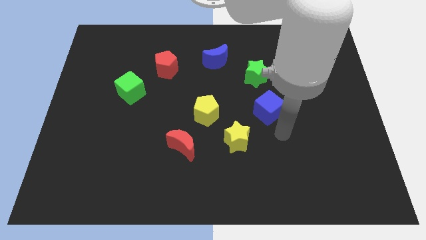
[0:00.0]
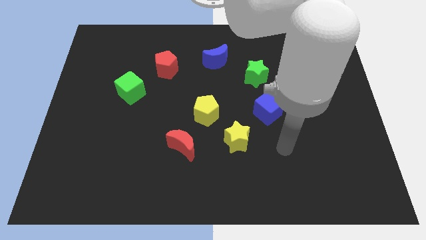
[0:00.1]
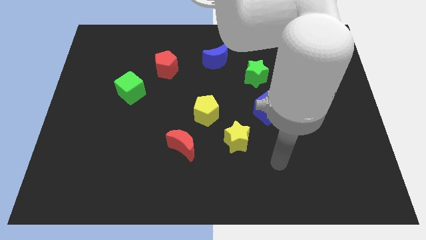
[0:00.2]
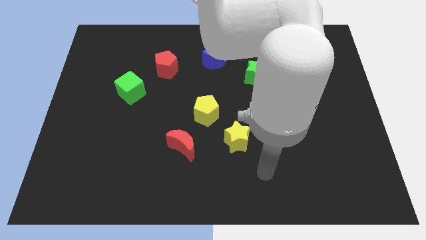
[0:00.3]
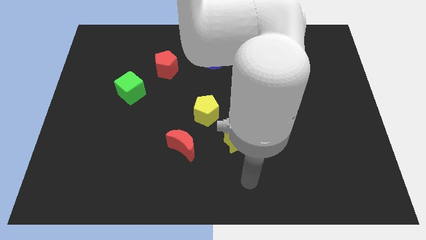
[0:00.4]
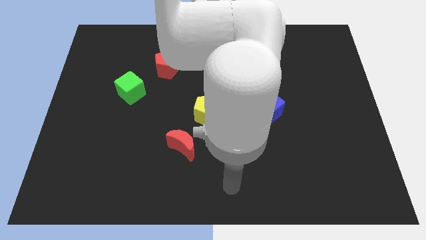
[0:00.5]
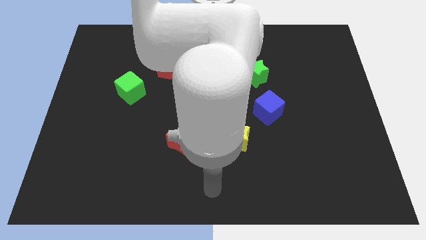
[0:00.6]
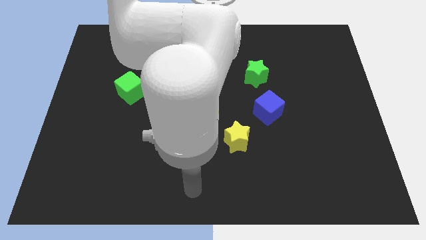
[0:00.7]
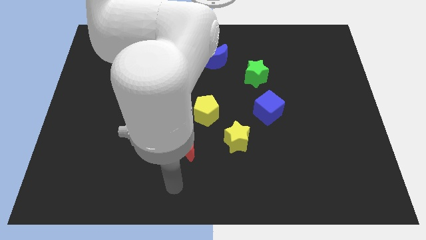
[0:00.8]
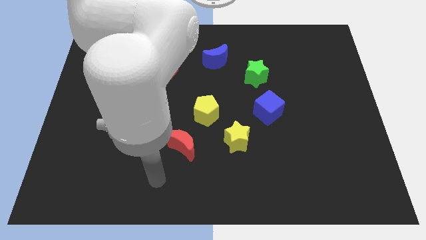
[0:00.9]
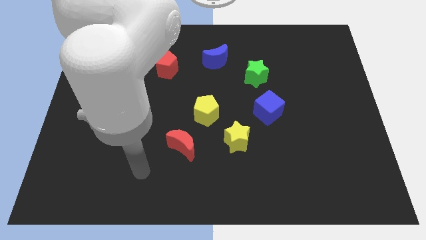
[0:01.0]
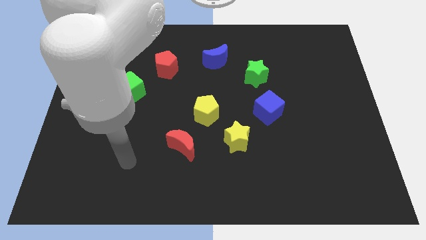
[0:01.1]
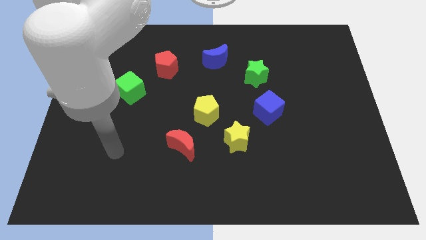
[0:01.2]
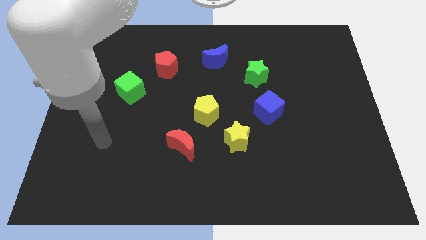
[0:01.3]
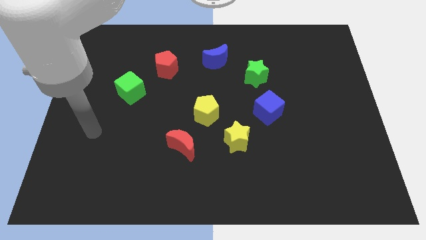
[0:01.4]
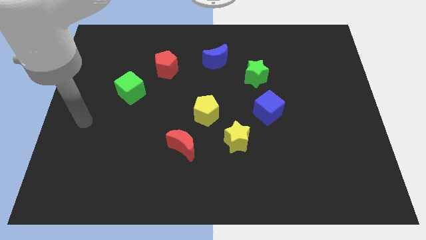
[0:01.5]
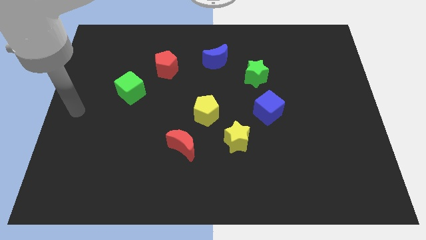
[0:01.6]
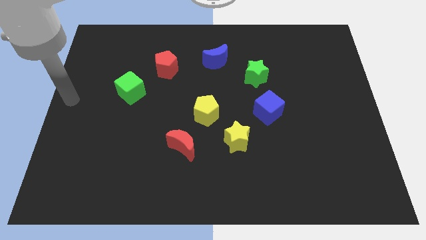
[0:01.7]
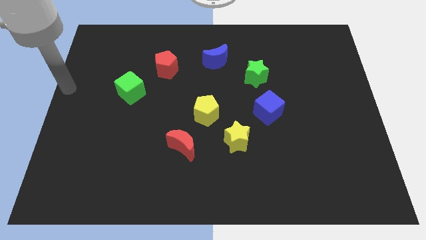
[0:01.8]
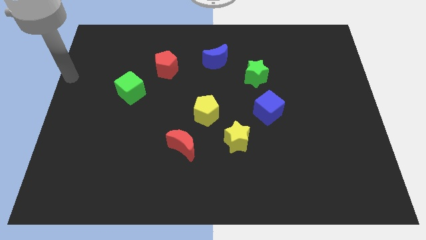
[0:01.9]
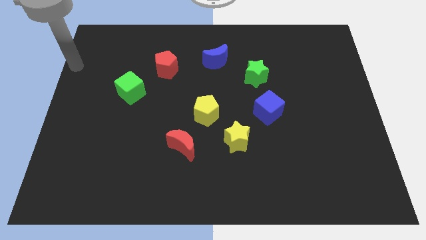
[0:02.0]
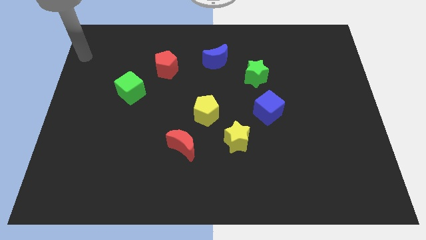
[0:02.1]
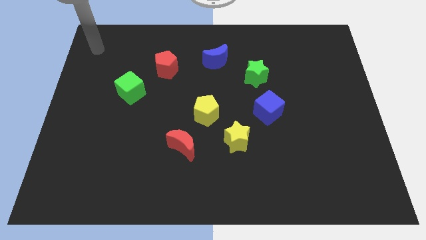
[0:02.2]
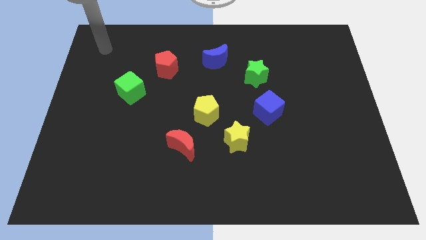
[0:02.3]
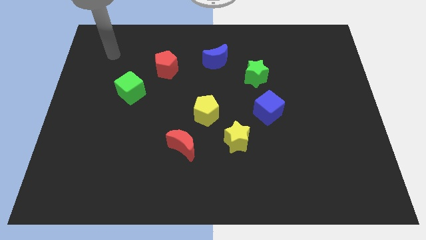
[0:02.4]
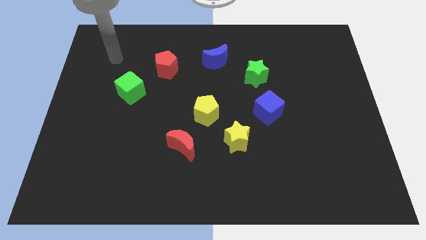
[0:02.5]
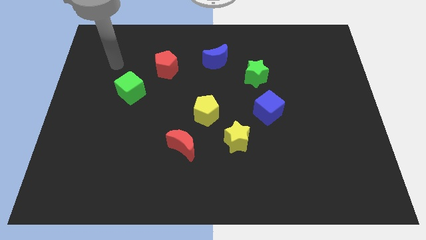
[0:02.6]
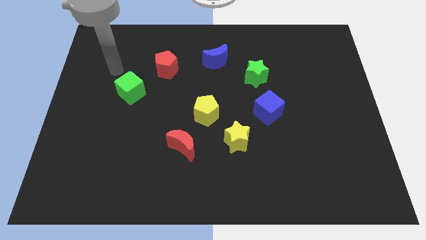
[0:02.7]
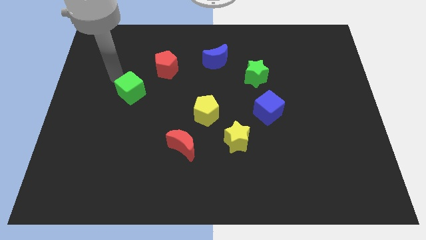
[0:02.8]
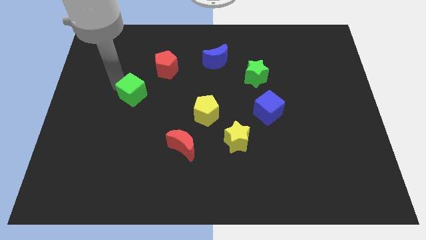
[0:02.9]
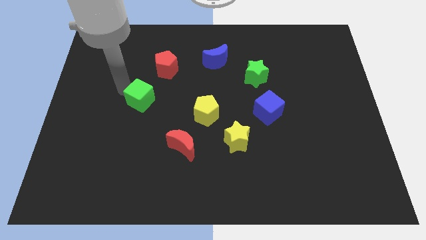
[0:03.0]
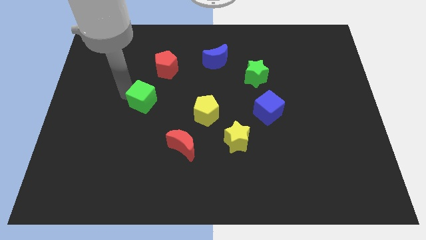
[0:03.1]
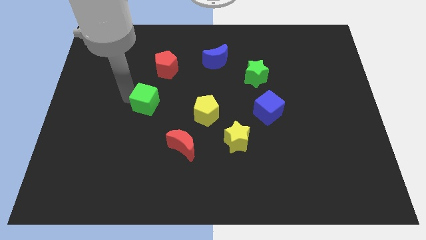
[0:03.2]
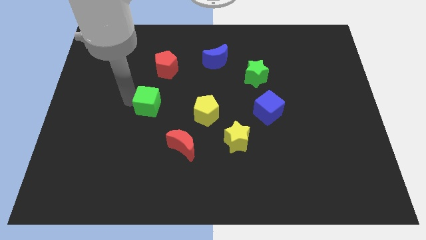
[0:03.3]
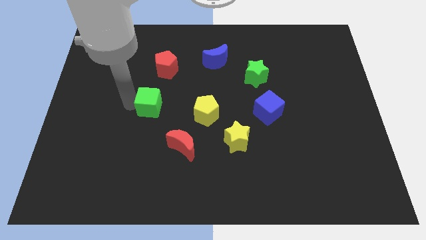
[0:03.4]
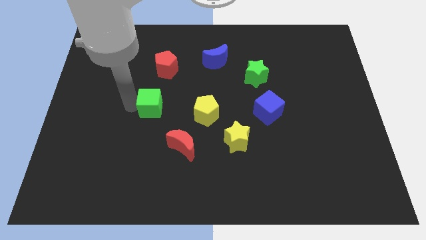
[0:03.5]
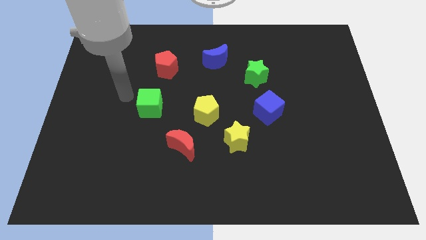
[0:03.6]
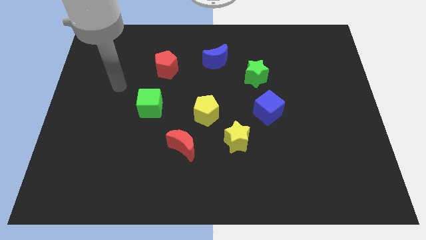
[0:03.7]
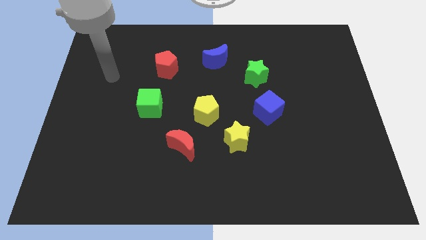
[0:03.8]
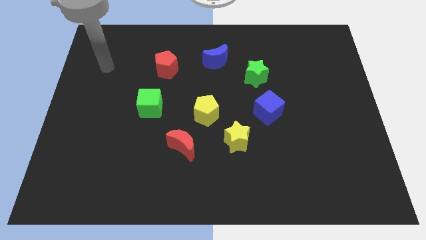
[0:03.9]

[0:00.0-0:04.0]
move the green cube to the bottom of the red pentagon

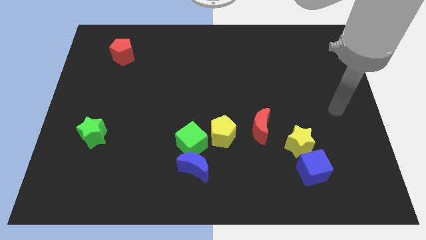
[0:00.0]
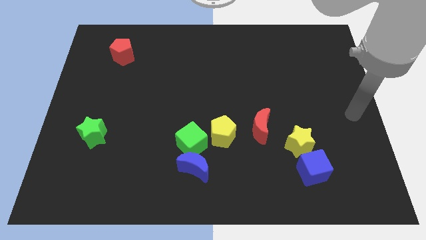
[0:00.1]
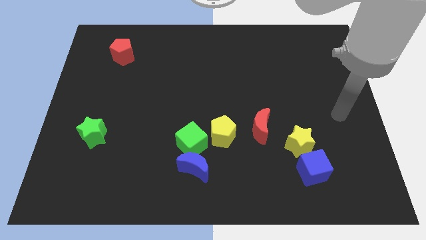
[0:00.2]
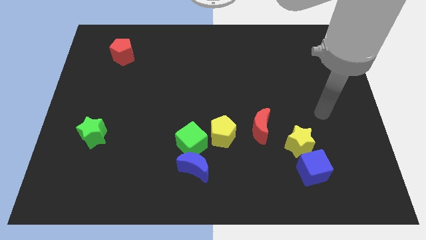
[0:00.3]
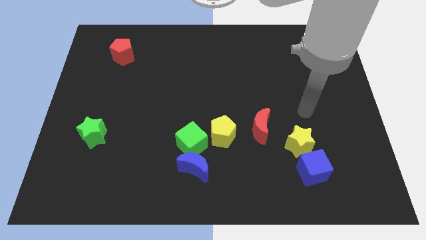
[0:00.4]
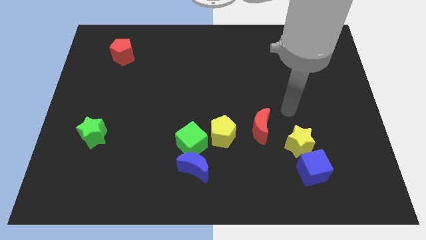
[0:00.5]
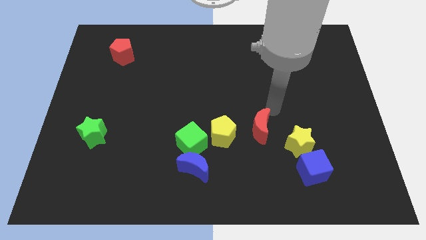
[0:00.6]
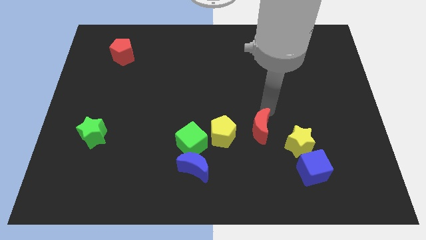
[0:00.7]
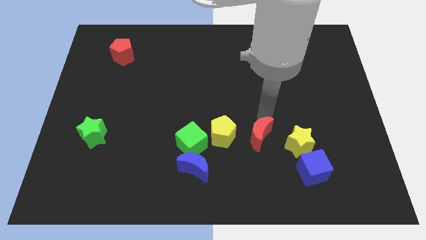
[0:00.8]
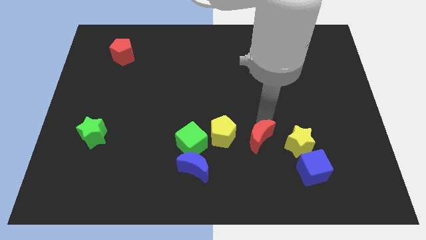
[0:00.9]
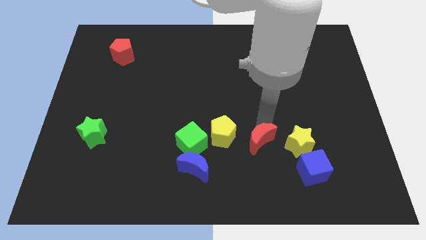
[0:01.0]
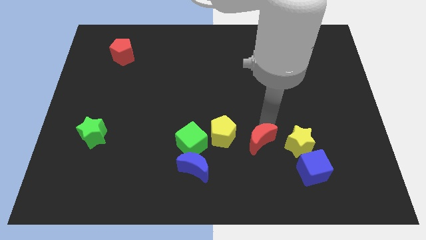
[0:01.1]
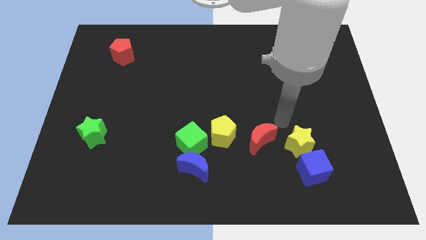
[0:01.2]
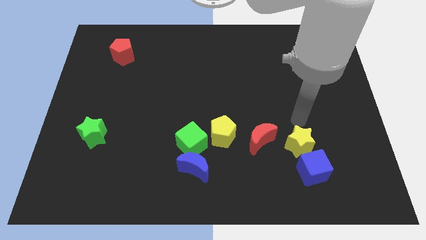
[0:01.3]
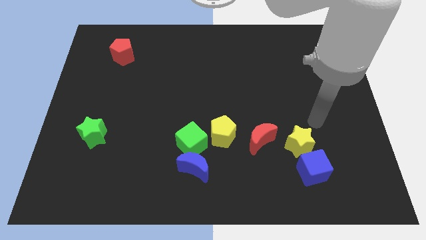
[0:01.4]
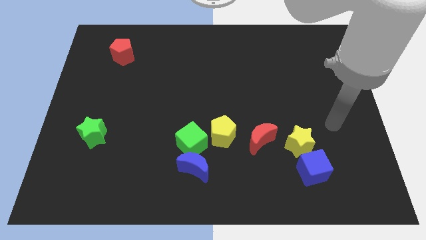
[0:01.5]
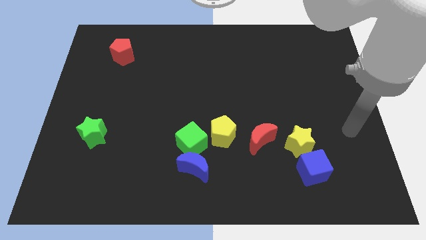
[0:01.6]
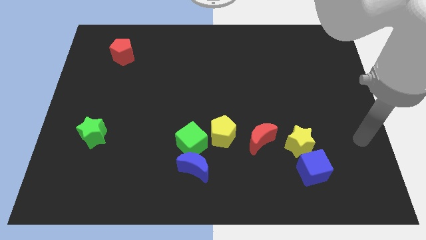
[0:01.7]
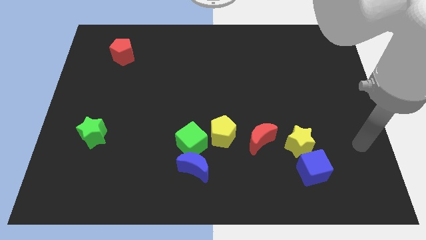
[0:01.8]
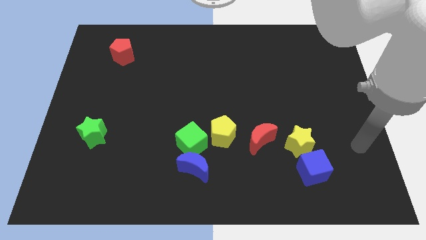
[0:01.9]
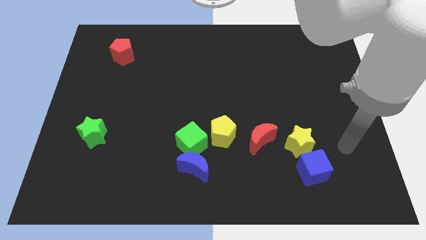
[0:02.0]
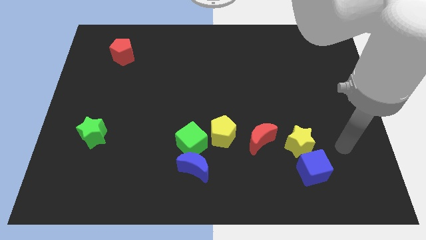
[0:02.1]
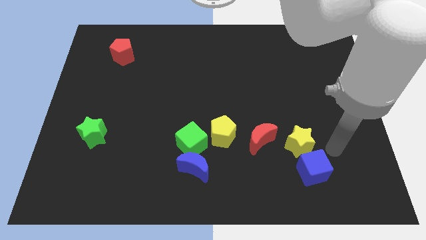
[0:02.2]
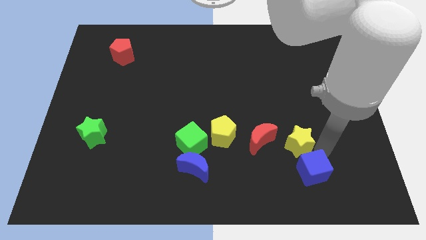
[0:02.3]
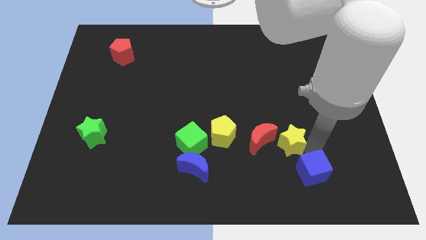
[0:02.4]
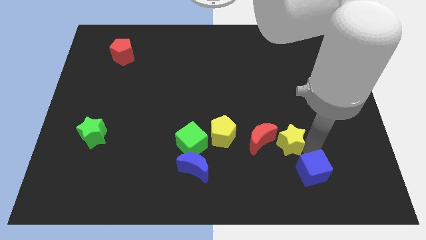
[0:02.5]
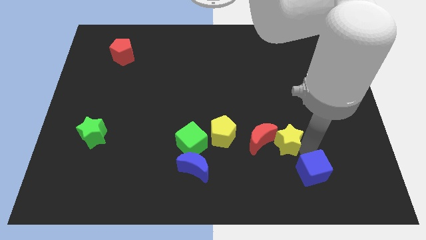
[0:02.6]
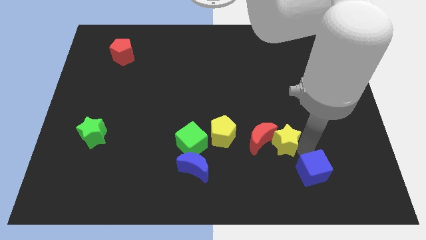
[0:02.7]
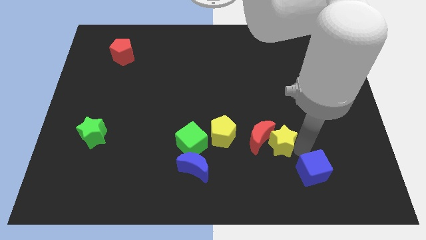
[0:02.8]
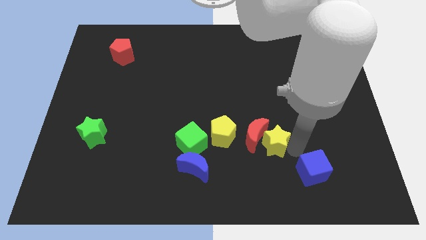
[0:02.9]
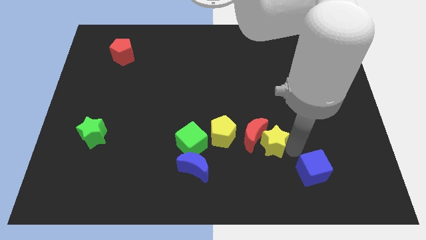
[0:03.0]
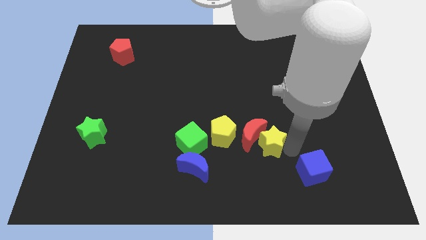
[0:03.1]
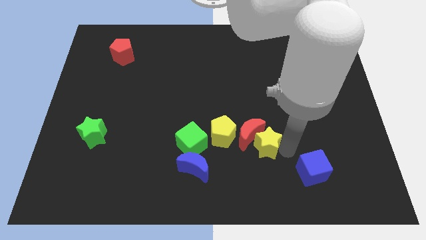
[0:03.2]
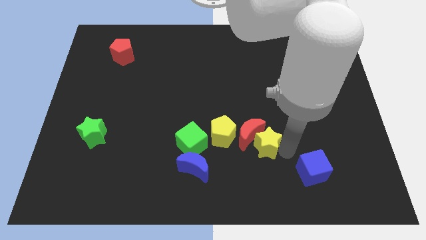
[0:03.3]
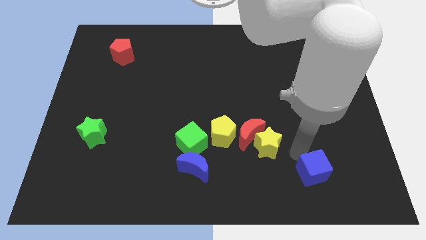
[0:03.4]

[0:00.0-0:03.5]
turn the red moon and push the yellow star into the red crescent

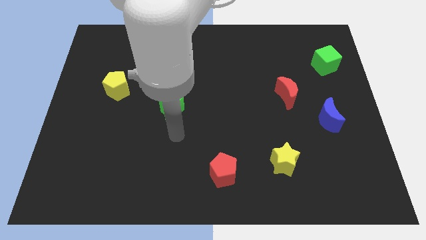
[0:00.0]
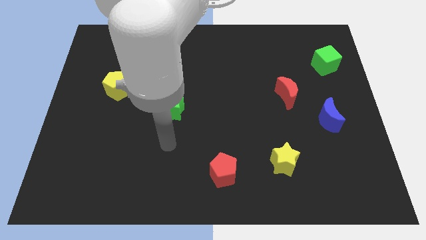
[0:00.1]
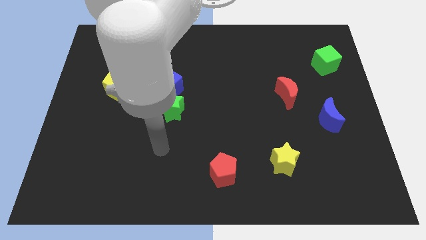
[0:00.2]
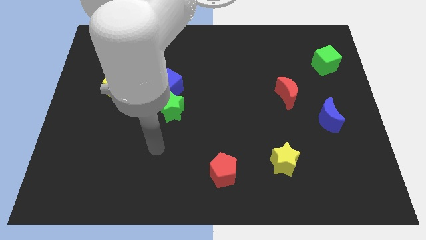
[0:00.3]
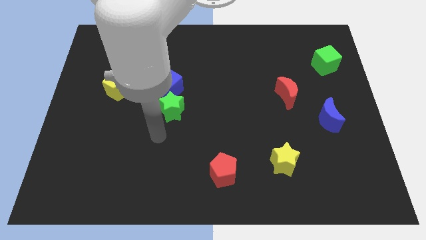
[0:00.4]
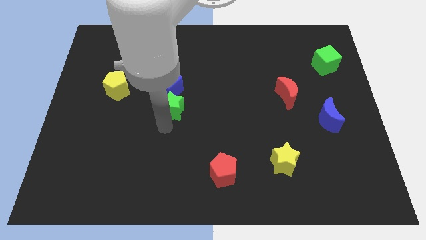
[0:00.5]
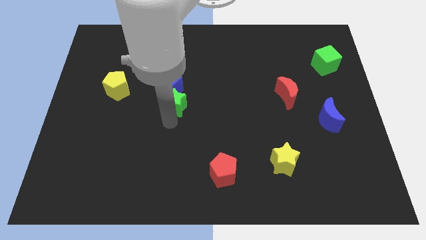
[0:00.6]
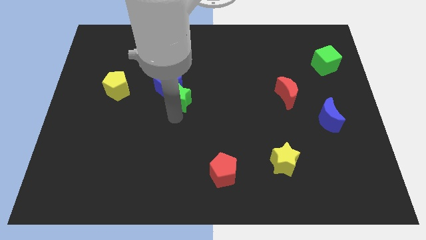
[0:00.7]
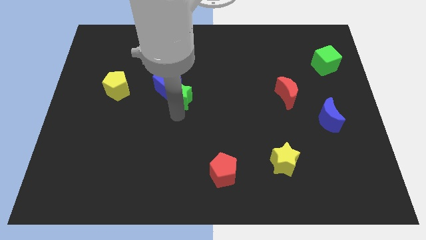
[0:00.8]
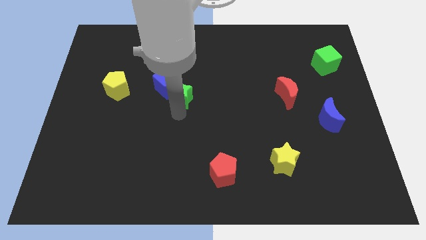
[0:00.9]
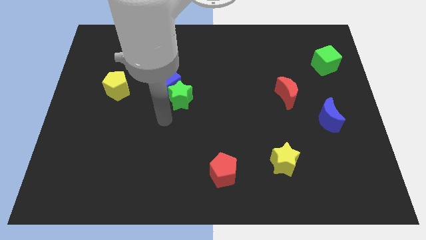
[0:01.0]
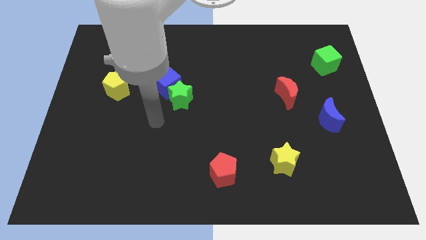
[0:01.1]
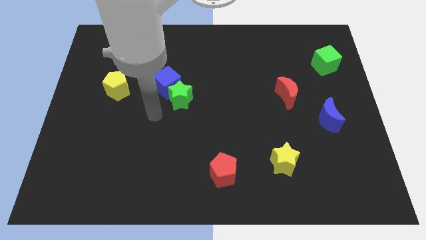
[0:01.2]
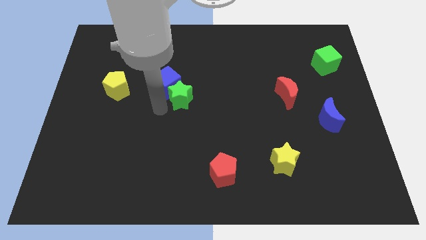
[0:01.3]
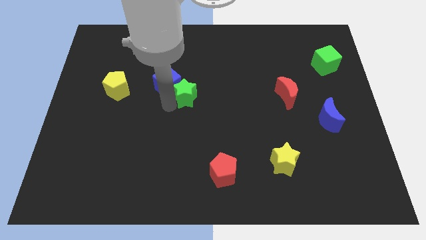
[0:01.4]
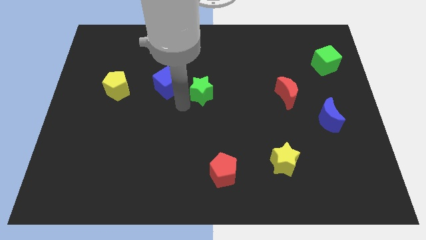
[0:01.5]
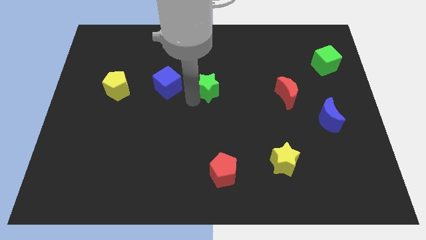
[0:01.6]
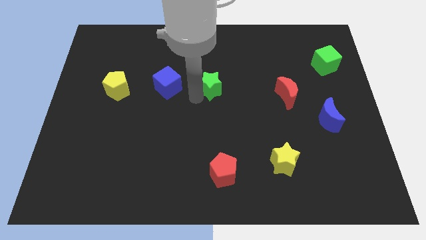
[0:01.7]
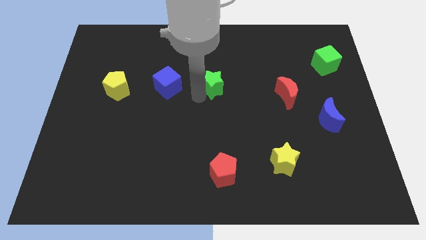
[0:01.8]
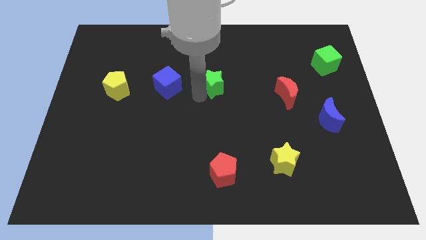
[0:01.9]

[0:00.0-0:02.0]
move the green star to the right of the blue cube
